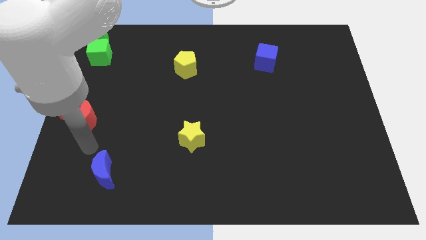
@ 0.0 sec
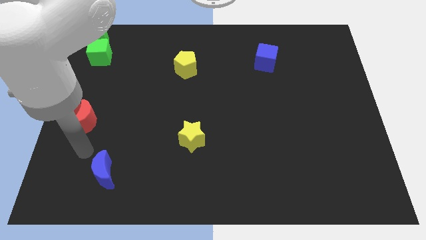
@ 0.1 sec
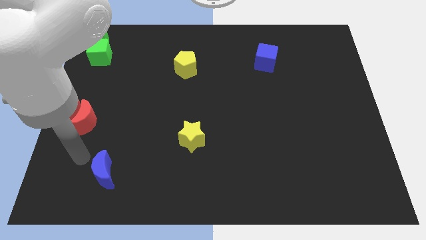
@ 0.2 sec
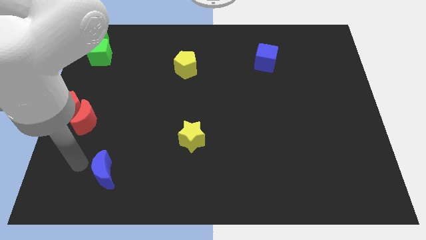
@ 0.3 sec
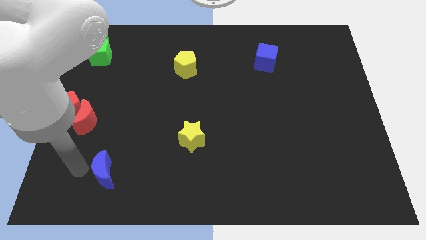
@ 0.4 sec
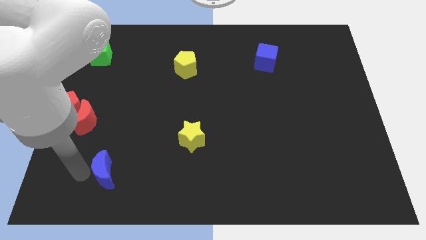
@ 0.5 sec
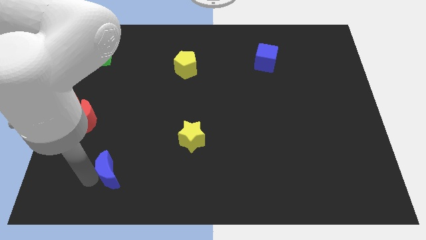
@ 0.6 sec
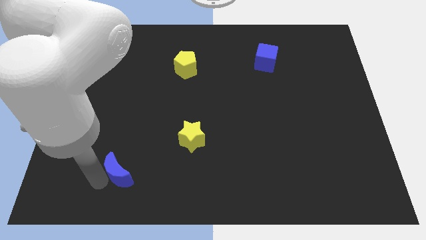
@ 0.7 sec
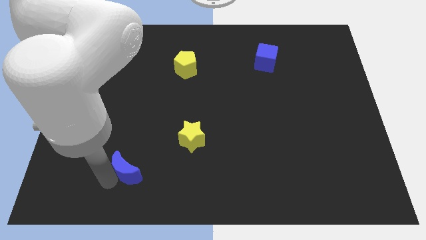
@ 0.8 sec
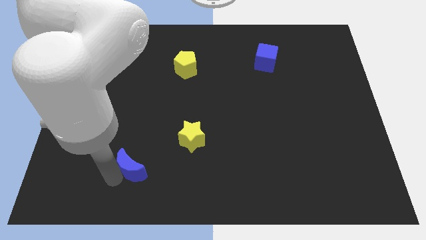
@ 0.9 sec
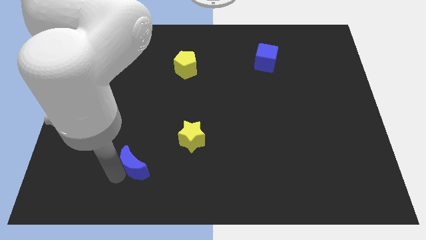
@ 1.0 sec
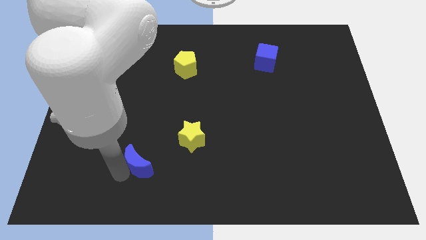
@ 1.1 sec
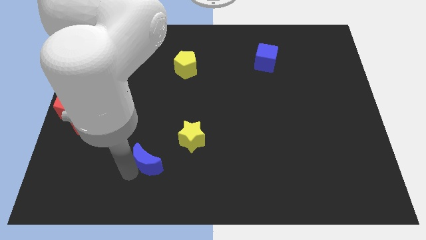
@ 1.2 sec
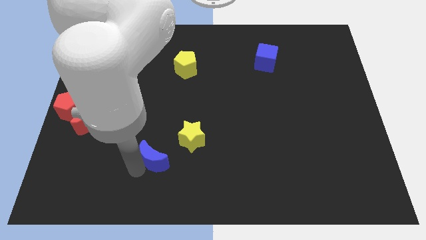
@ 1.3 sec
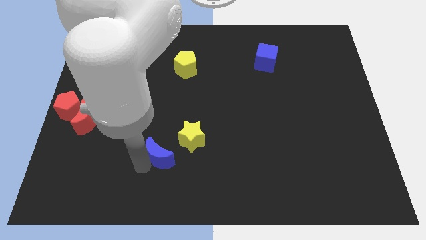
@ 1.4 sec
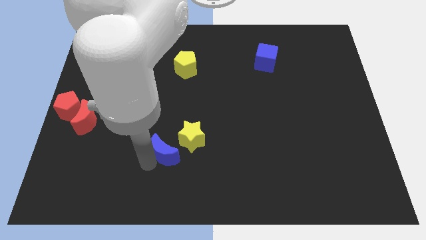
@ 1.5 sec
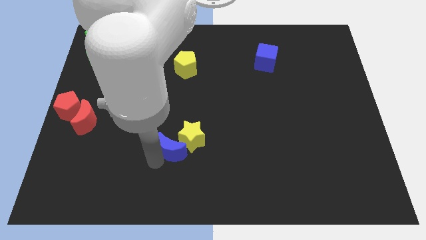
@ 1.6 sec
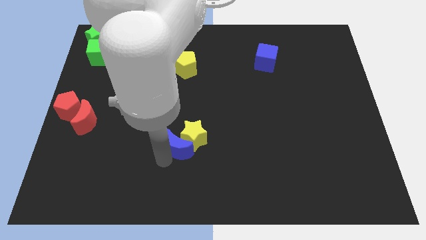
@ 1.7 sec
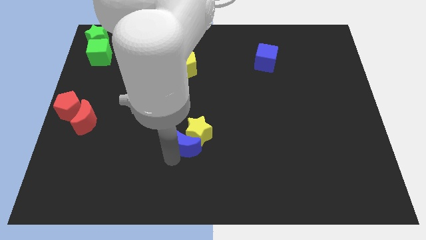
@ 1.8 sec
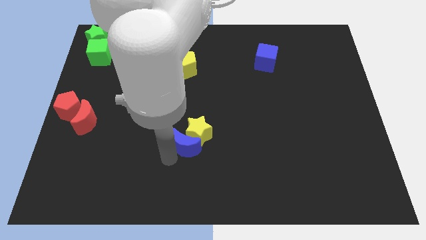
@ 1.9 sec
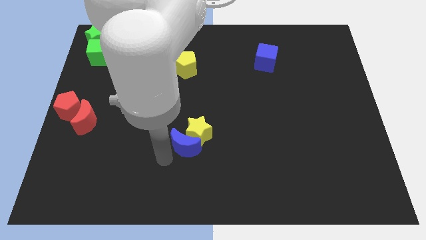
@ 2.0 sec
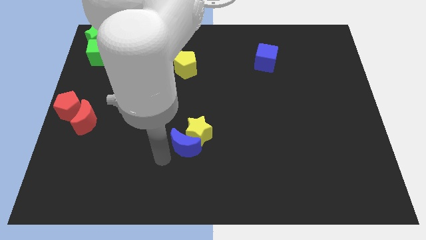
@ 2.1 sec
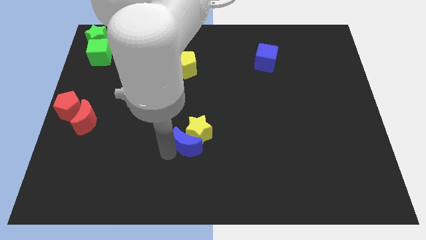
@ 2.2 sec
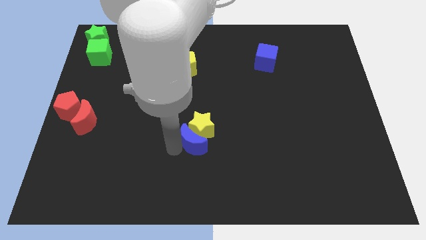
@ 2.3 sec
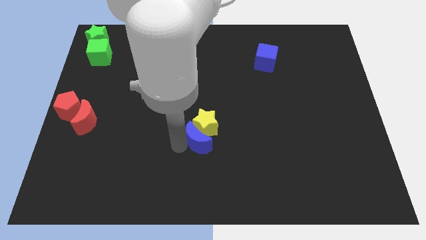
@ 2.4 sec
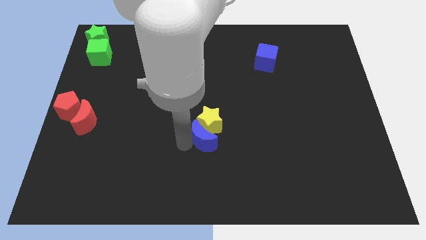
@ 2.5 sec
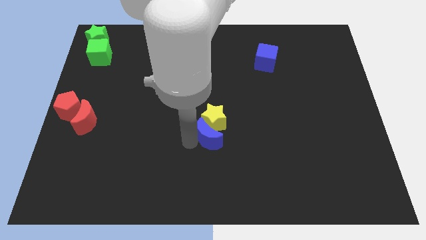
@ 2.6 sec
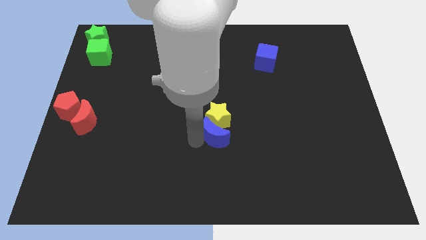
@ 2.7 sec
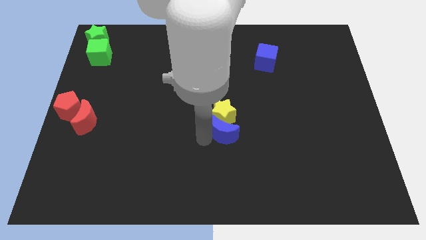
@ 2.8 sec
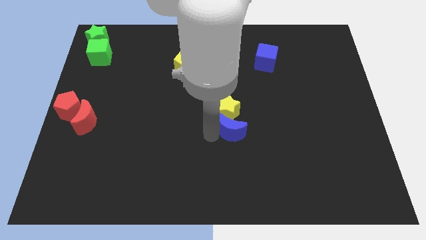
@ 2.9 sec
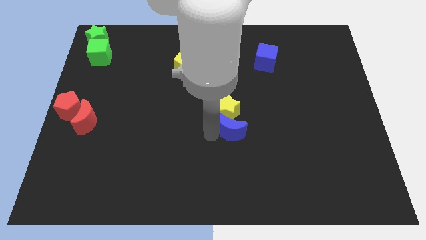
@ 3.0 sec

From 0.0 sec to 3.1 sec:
place the blue crescent below the yellow star

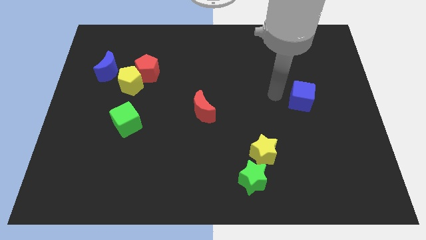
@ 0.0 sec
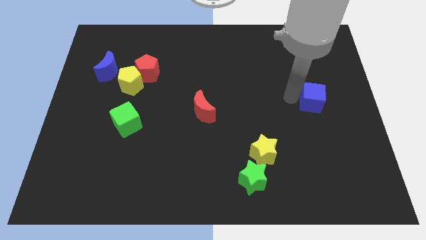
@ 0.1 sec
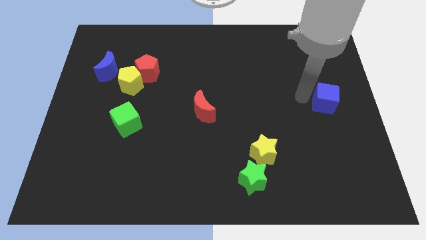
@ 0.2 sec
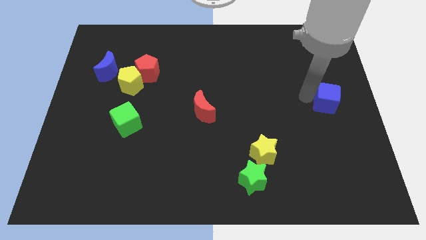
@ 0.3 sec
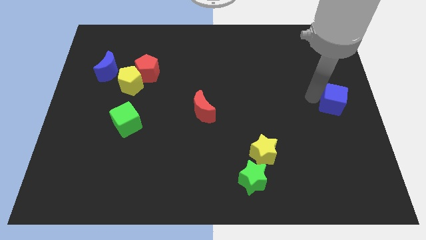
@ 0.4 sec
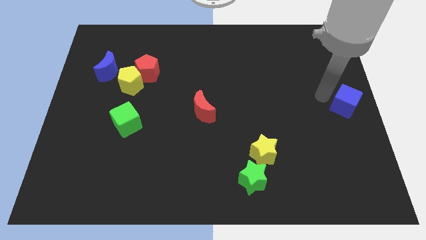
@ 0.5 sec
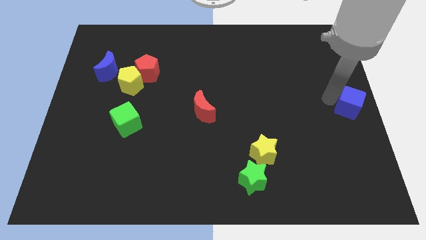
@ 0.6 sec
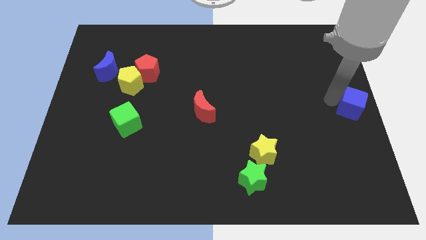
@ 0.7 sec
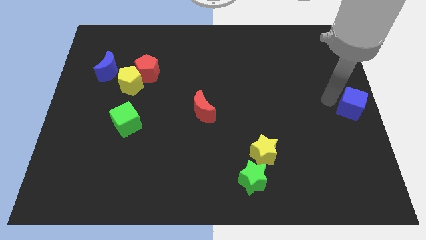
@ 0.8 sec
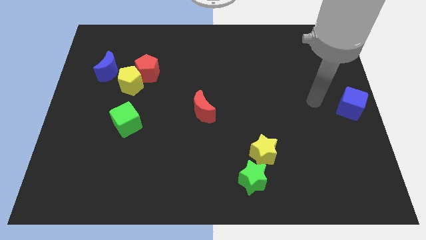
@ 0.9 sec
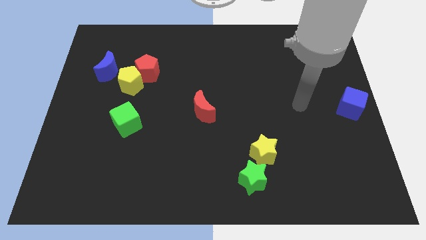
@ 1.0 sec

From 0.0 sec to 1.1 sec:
drag the blue cube to the right

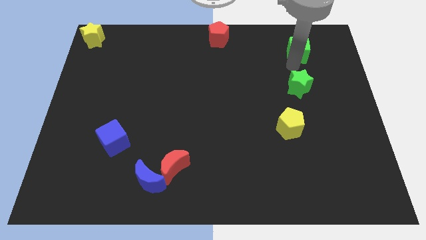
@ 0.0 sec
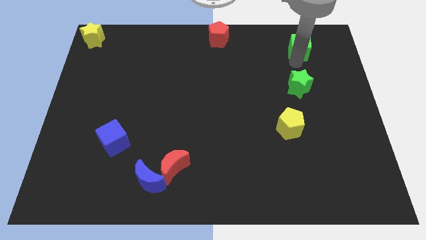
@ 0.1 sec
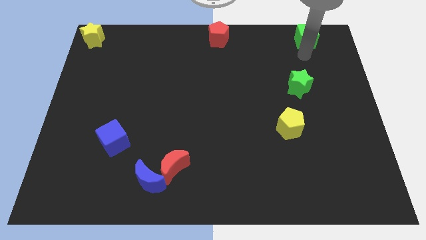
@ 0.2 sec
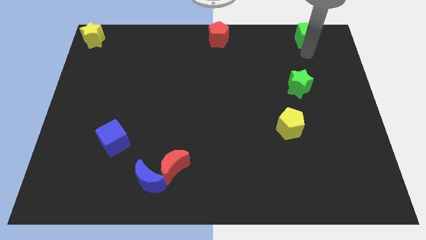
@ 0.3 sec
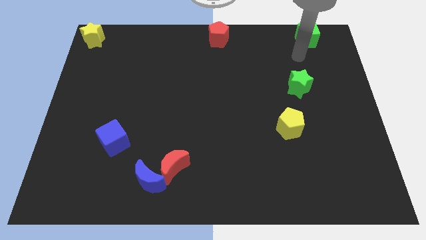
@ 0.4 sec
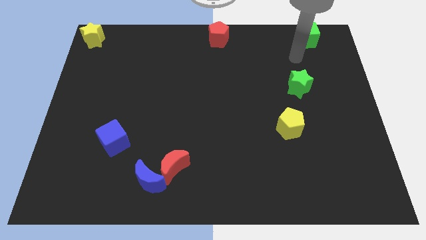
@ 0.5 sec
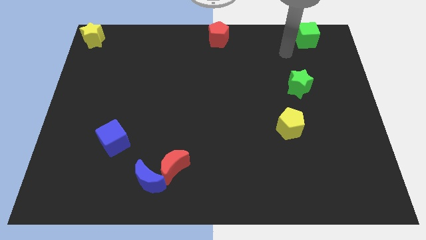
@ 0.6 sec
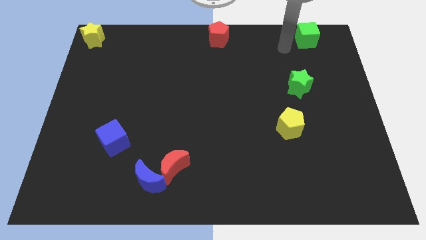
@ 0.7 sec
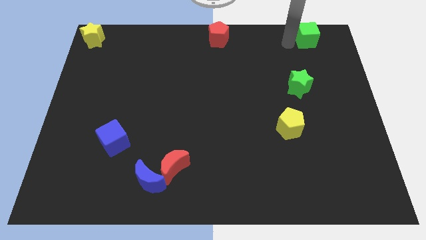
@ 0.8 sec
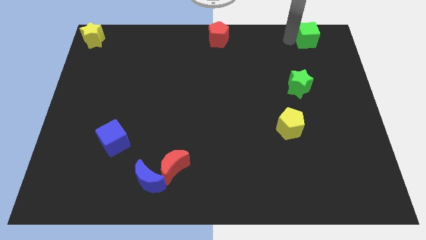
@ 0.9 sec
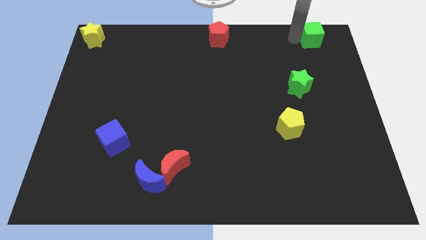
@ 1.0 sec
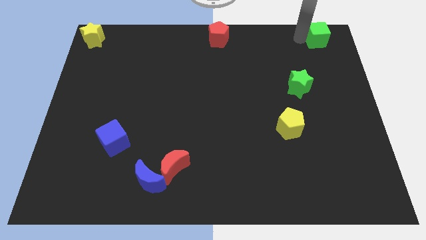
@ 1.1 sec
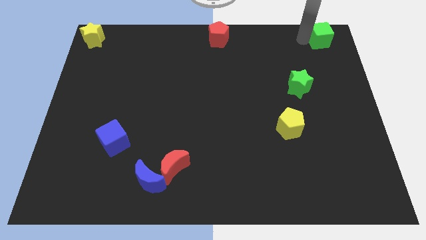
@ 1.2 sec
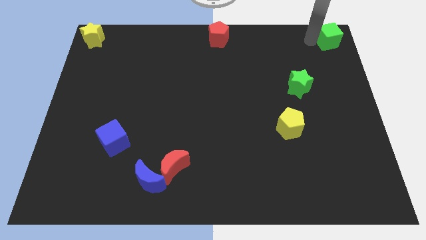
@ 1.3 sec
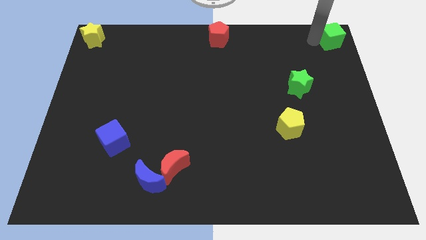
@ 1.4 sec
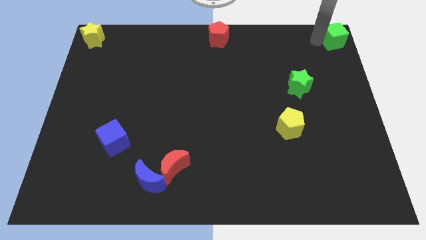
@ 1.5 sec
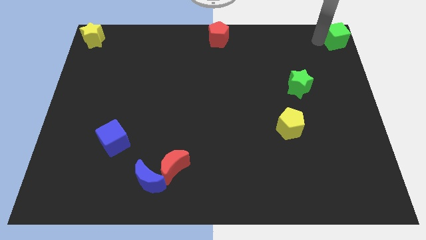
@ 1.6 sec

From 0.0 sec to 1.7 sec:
place the green cube at top right corner of the board

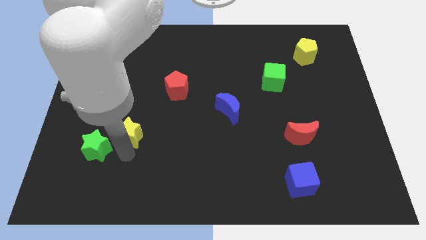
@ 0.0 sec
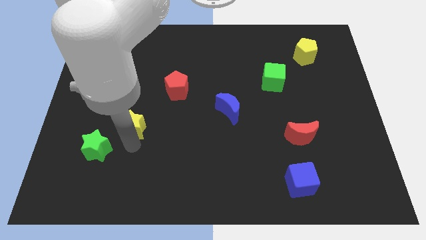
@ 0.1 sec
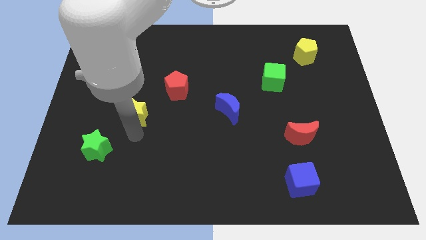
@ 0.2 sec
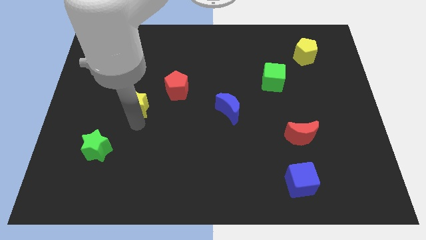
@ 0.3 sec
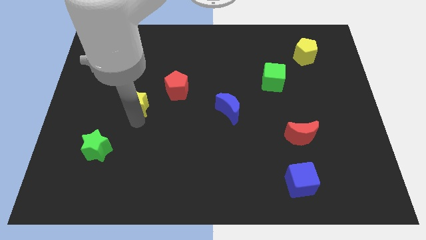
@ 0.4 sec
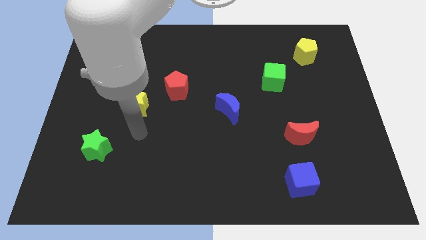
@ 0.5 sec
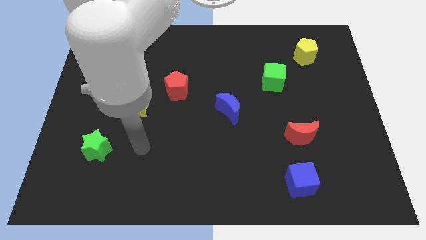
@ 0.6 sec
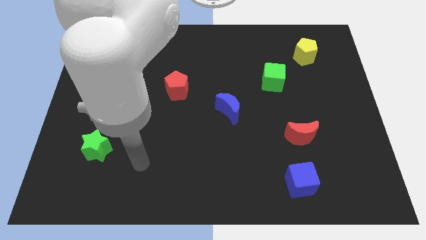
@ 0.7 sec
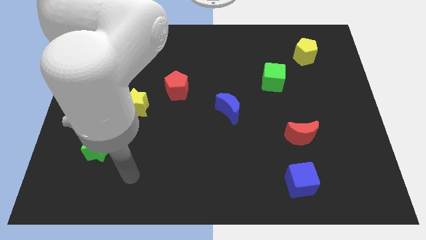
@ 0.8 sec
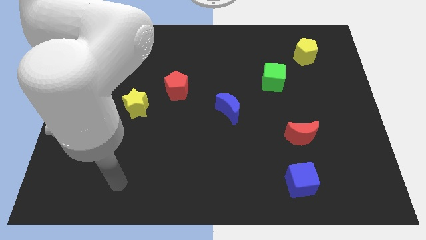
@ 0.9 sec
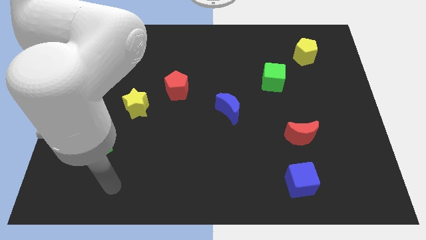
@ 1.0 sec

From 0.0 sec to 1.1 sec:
move the yellow star horizontal left of the blue crescent

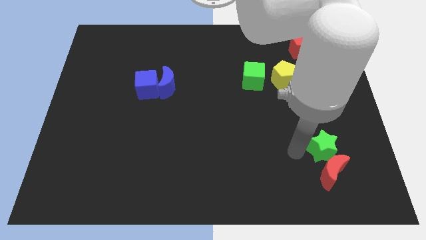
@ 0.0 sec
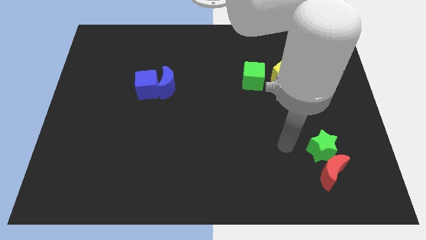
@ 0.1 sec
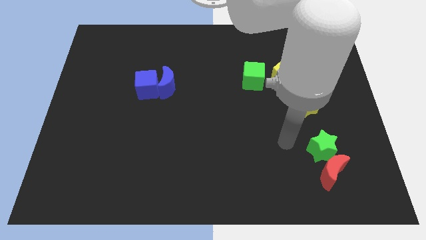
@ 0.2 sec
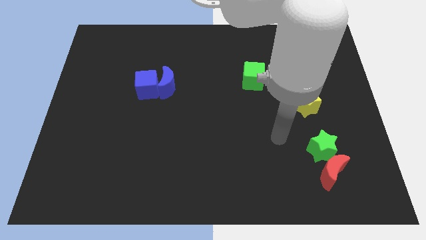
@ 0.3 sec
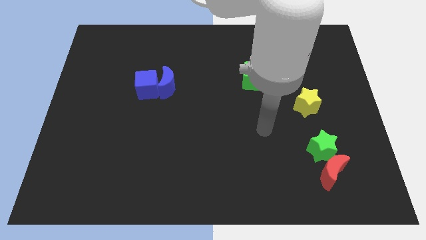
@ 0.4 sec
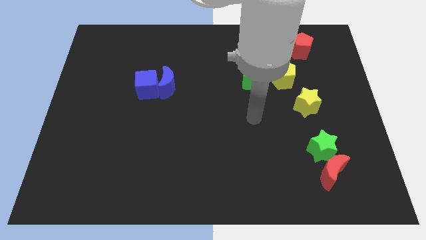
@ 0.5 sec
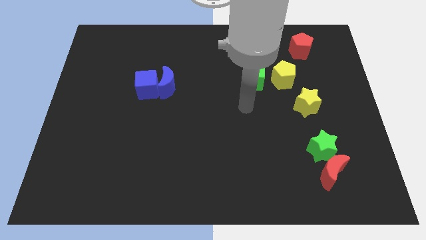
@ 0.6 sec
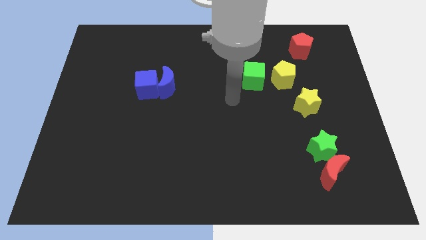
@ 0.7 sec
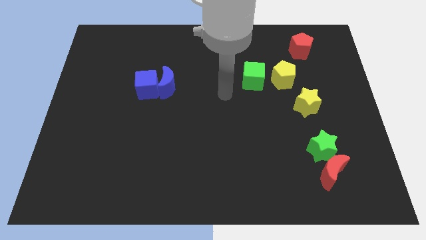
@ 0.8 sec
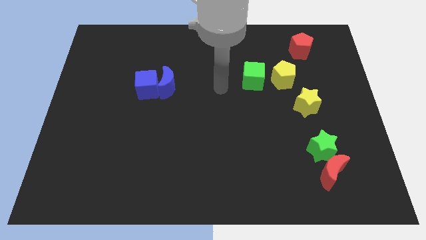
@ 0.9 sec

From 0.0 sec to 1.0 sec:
move the arm away from the green star

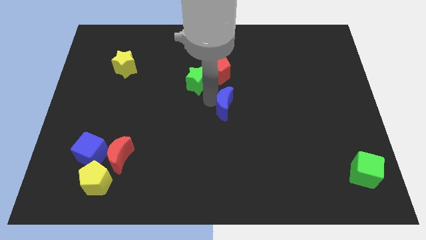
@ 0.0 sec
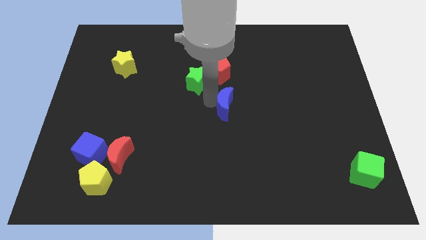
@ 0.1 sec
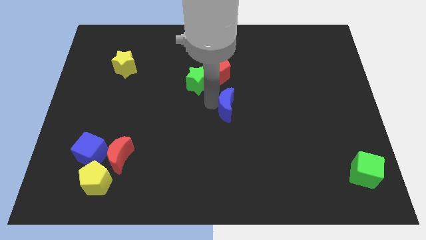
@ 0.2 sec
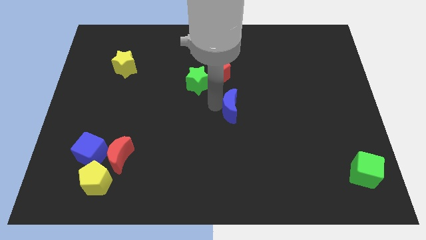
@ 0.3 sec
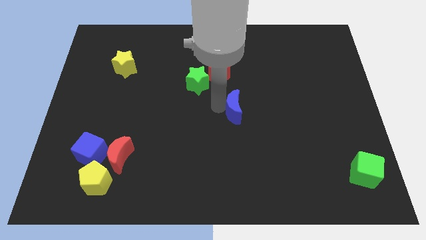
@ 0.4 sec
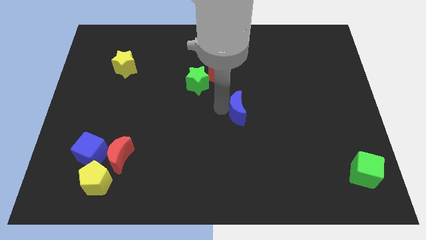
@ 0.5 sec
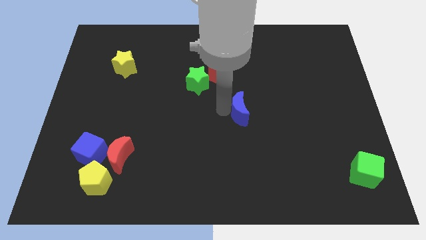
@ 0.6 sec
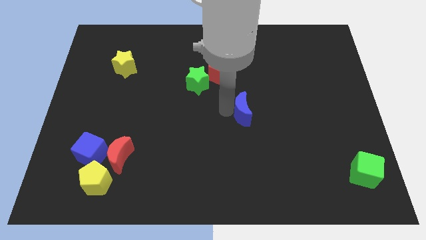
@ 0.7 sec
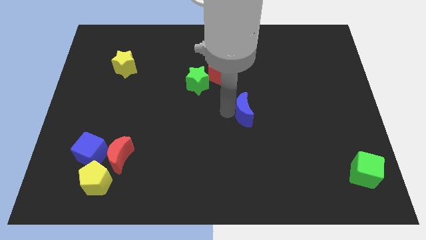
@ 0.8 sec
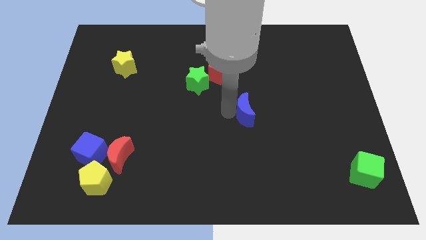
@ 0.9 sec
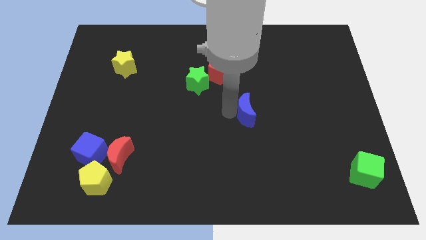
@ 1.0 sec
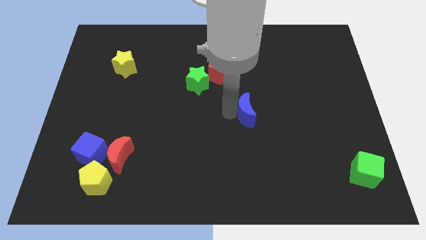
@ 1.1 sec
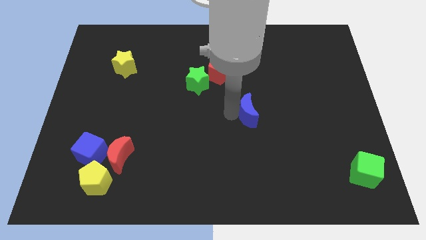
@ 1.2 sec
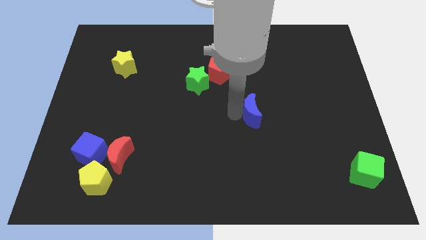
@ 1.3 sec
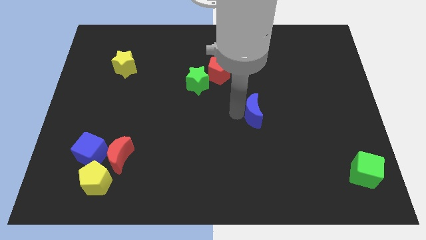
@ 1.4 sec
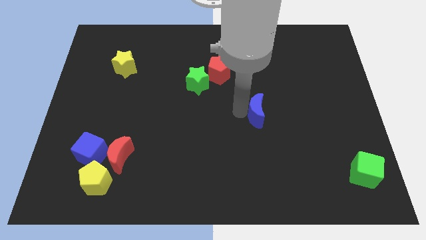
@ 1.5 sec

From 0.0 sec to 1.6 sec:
separate the blue moon from green star
